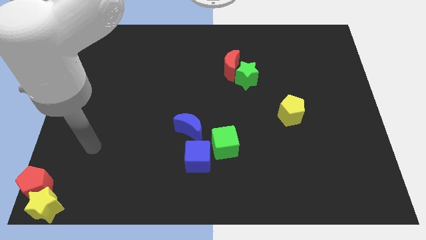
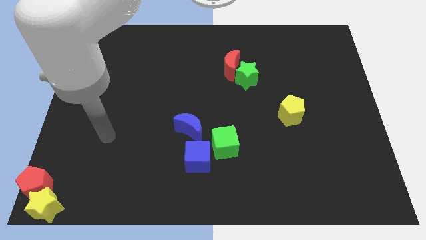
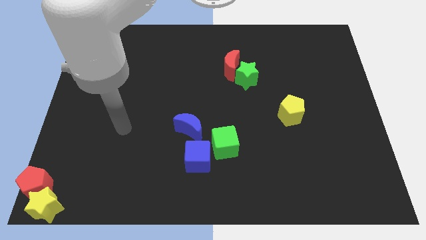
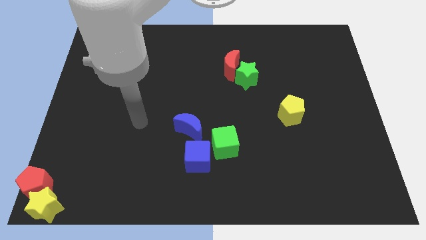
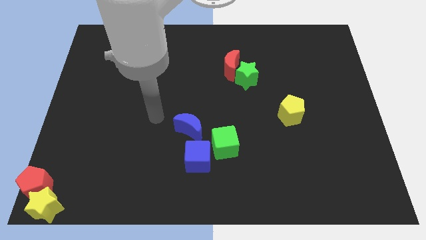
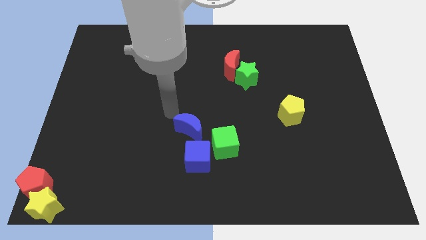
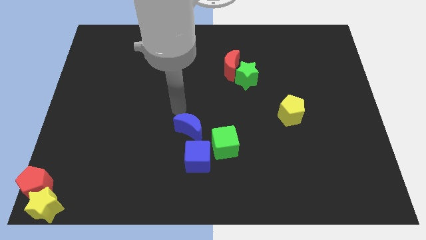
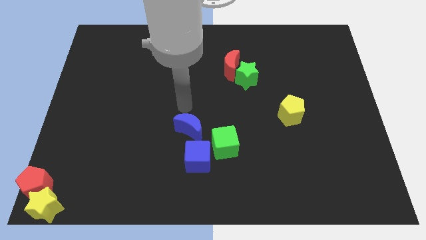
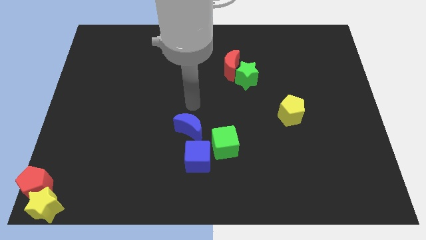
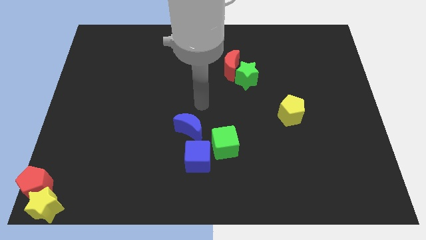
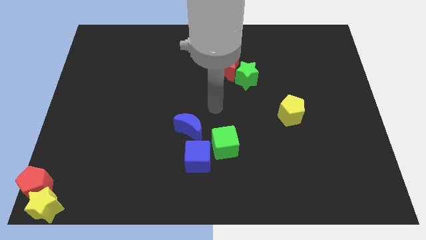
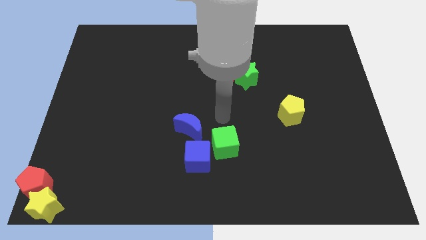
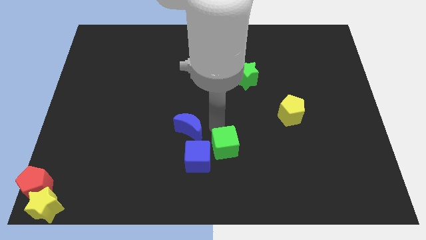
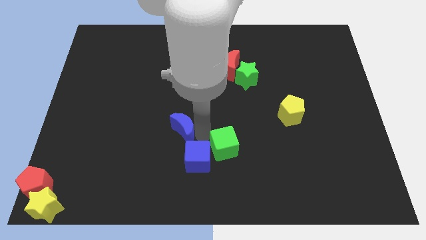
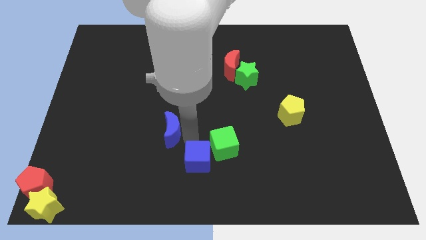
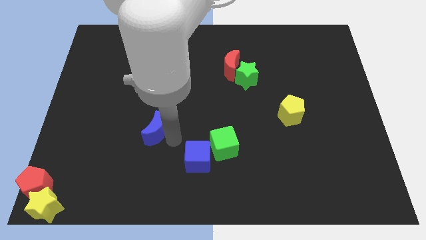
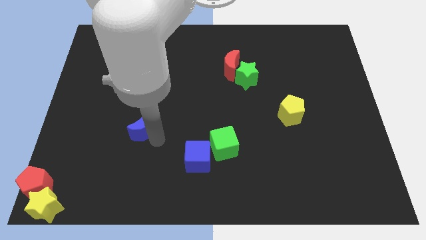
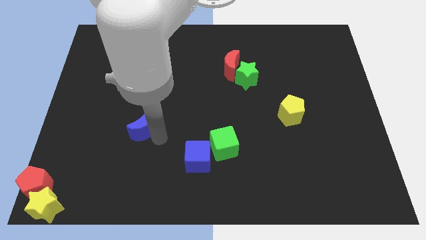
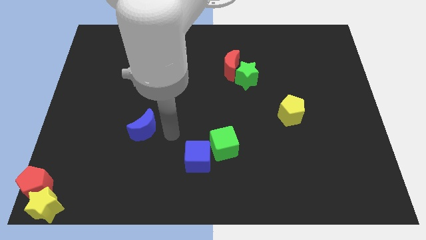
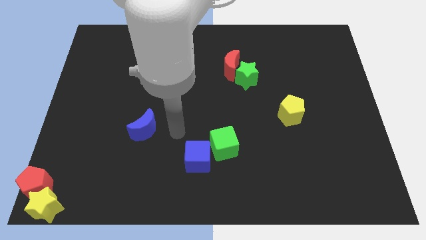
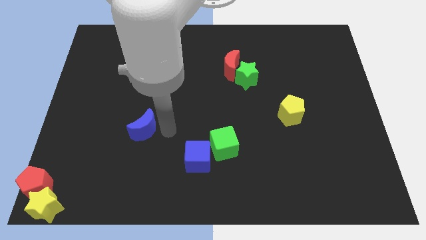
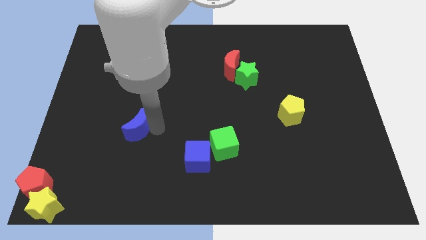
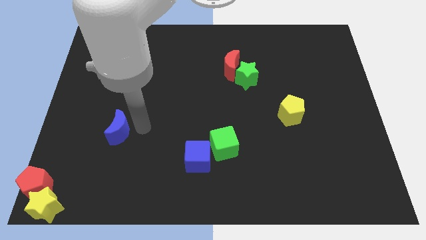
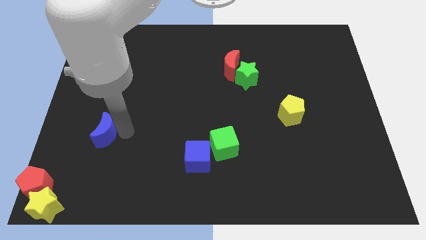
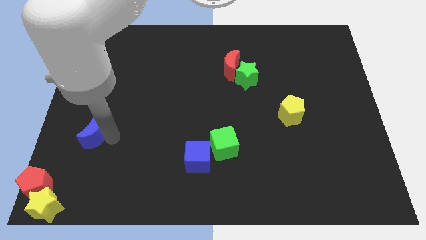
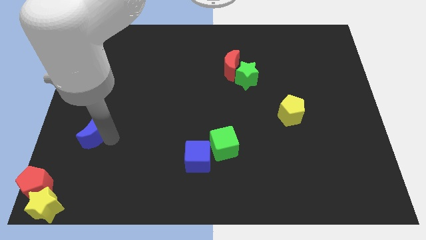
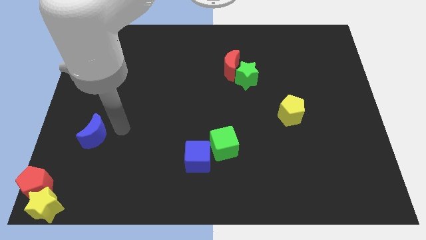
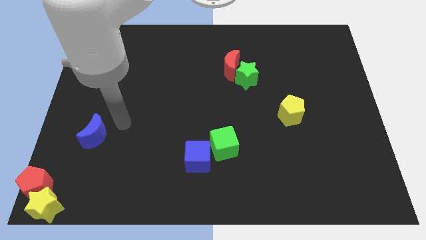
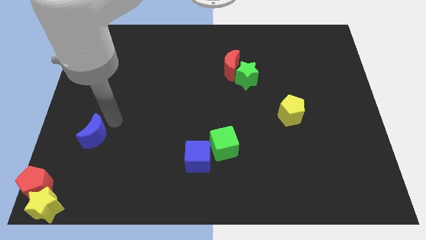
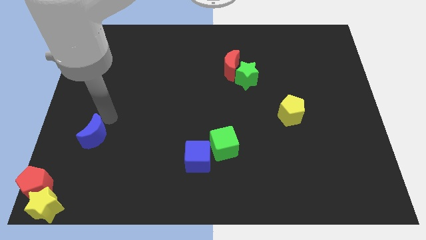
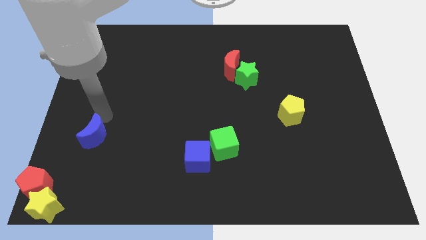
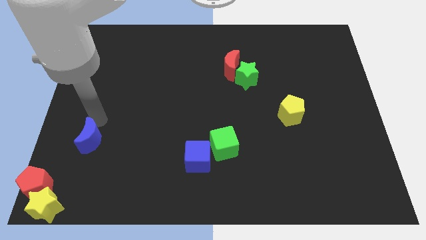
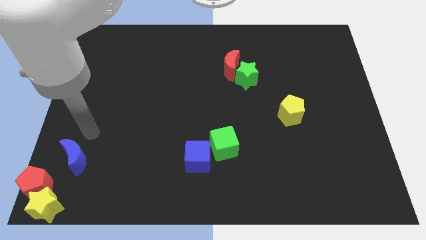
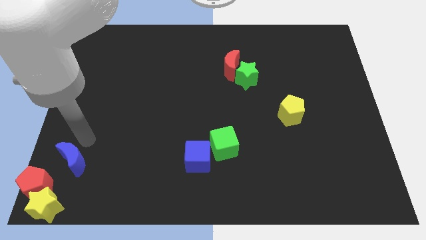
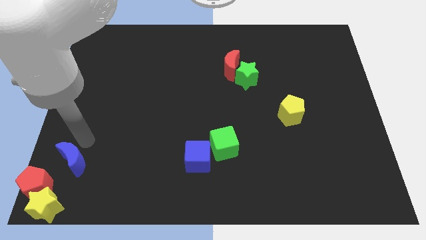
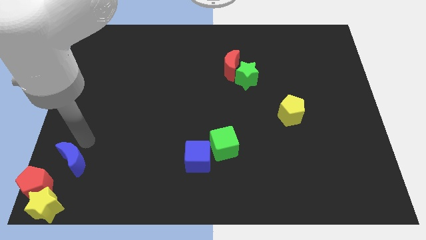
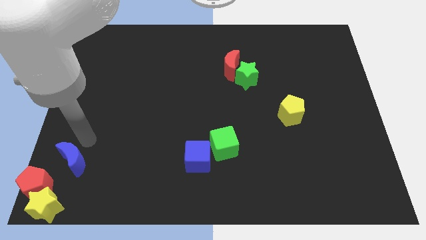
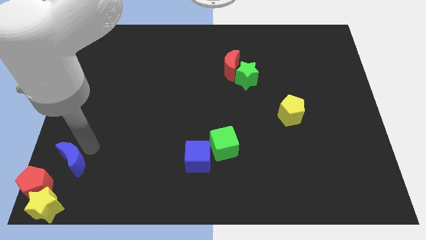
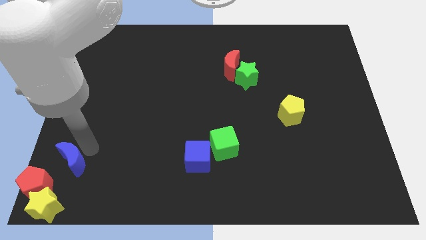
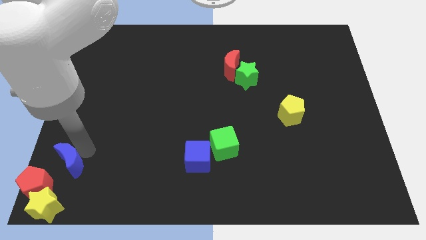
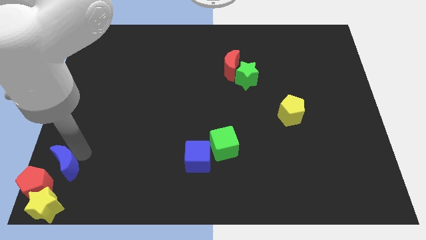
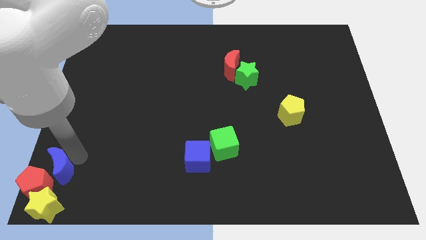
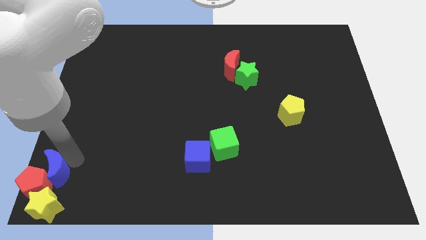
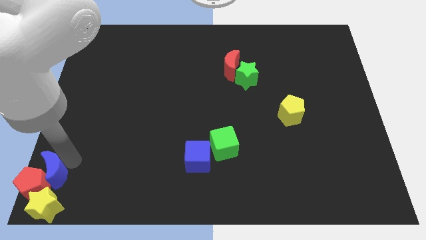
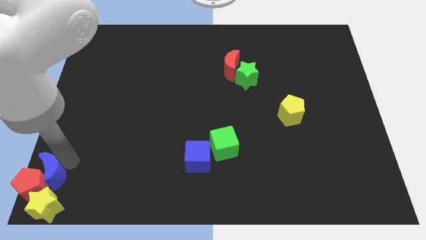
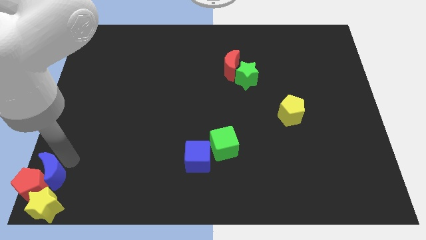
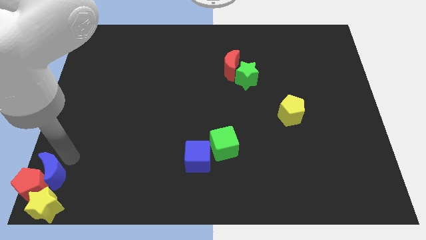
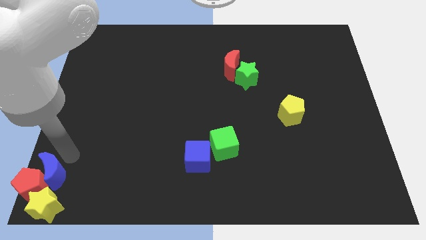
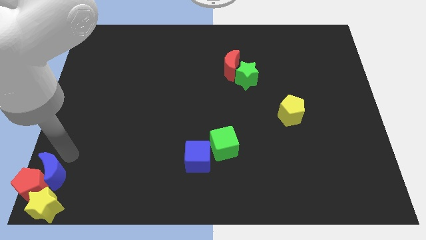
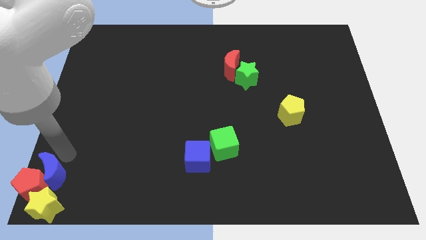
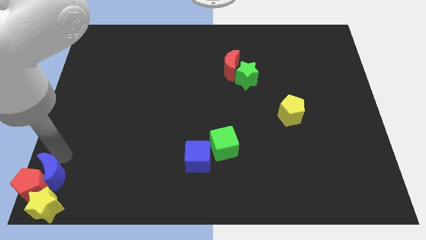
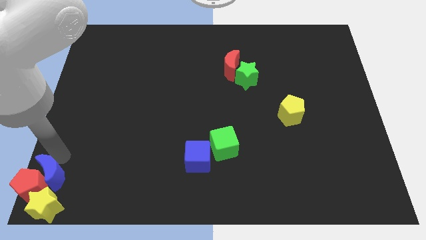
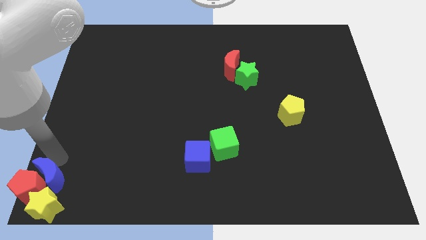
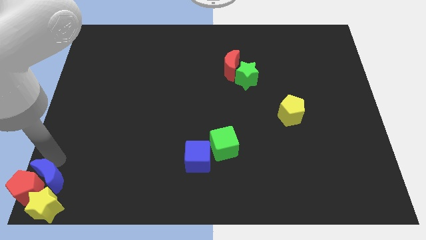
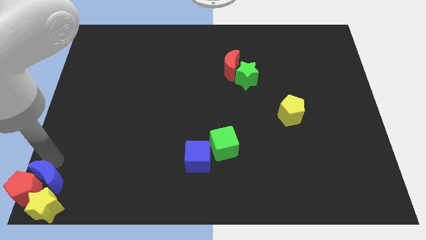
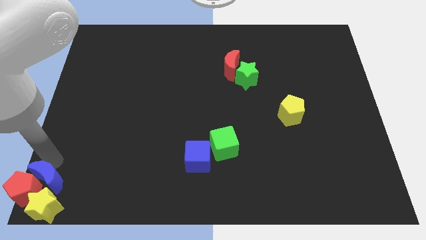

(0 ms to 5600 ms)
push the blue moon into the group of blocks

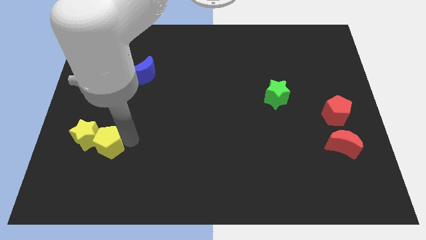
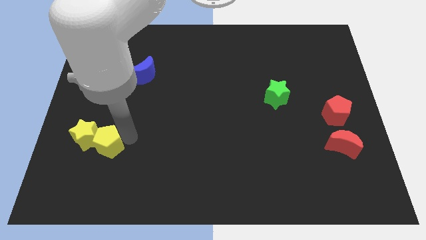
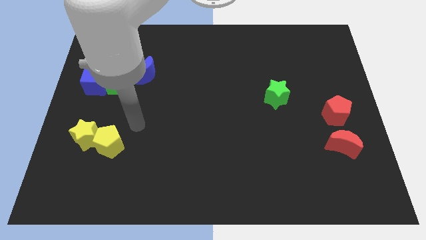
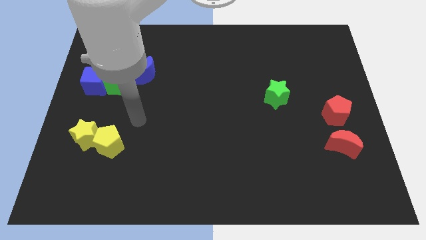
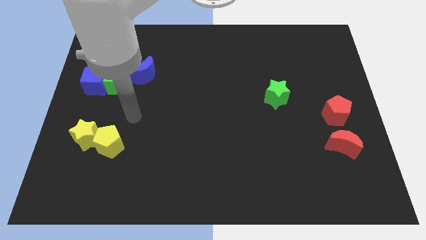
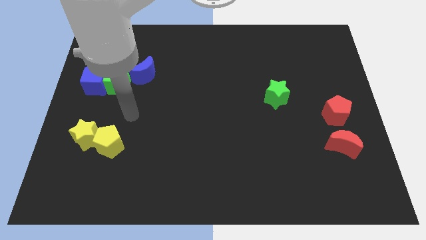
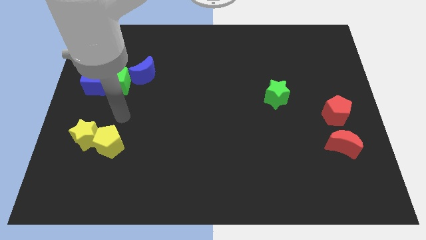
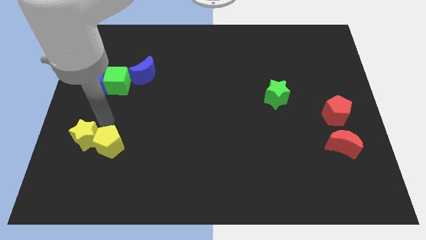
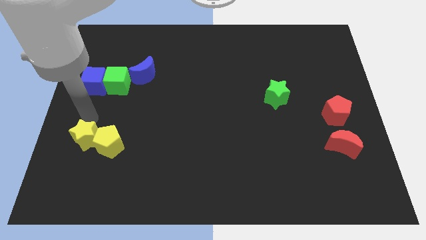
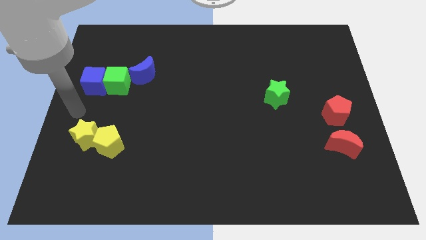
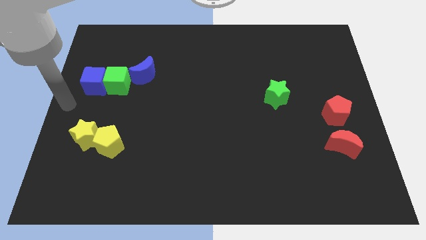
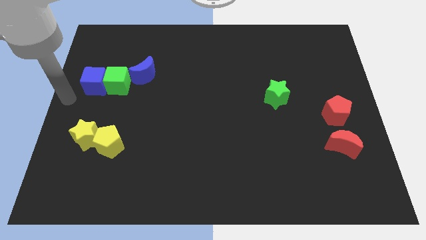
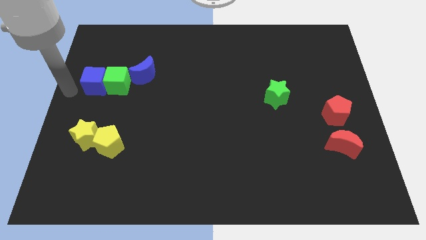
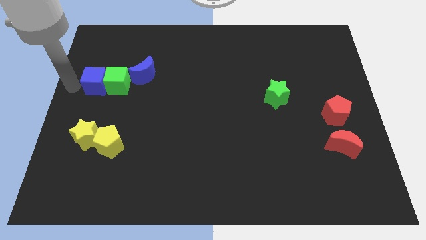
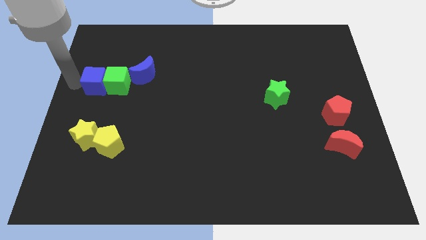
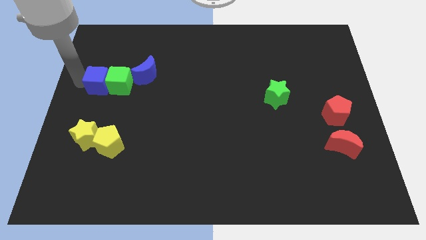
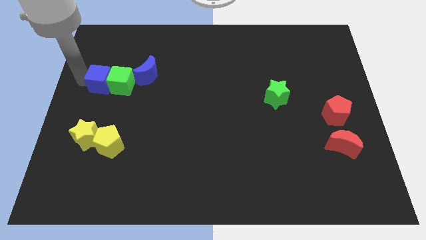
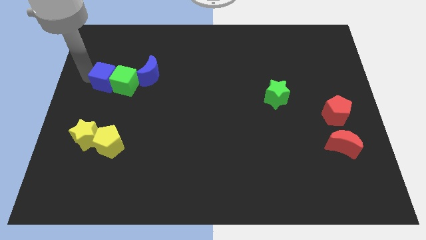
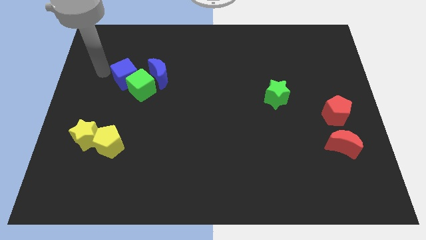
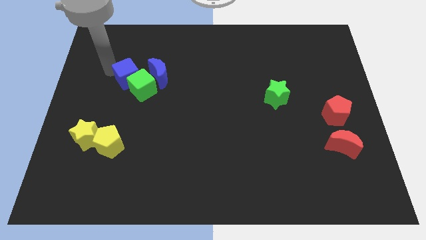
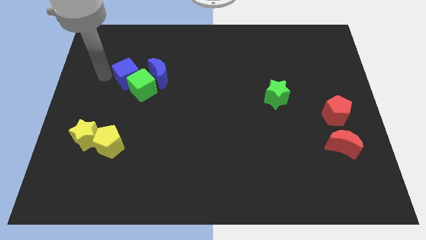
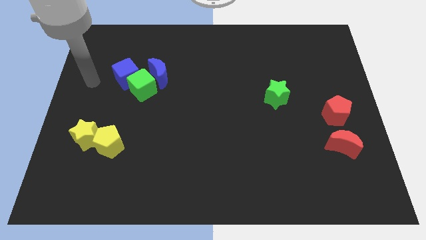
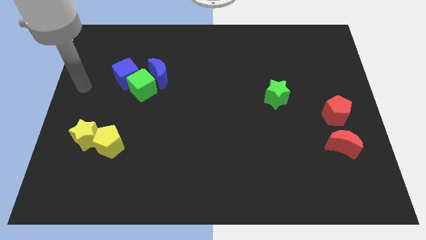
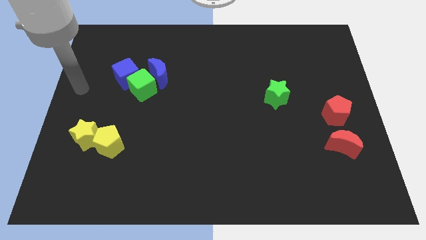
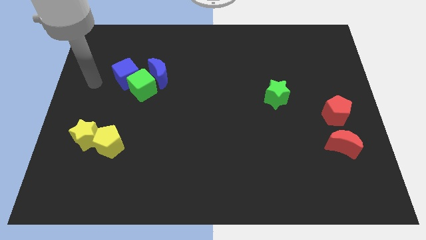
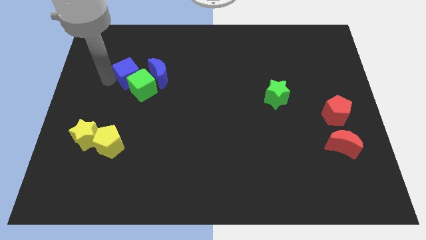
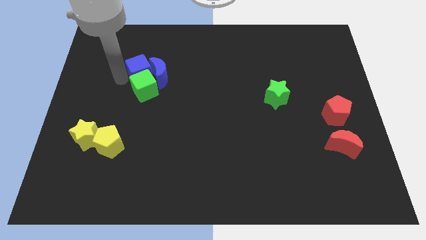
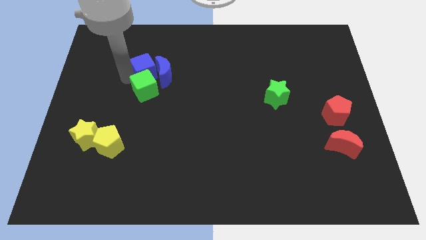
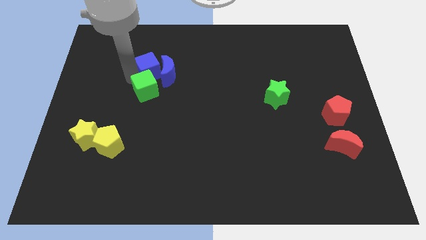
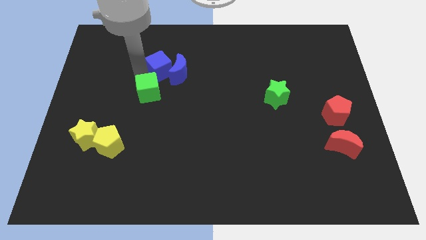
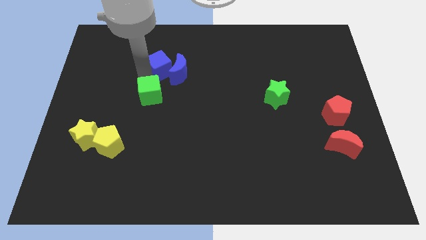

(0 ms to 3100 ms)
push the blue cube into the blue crescent

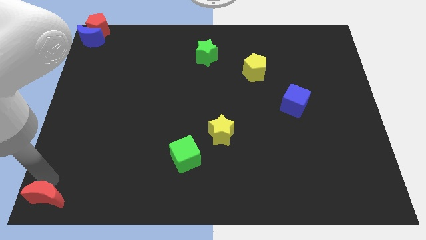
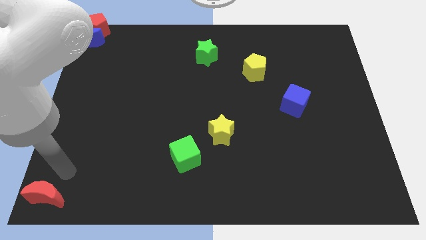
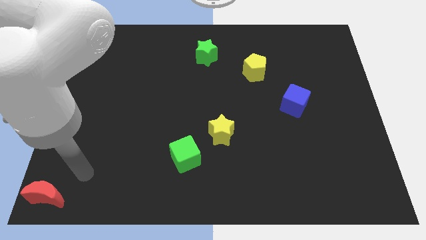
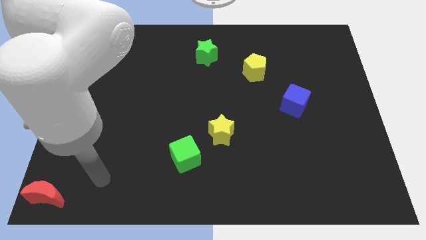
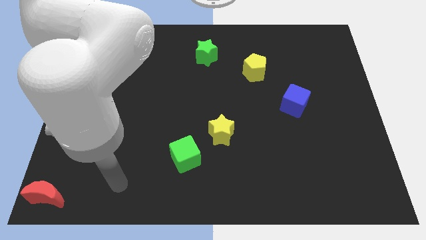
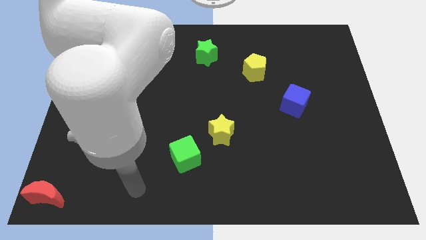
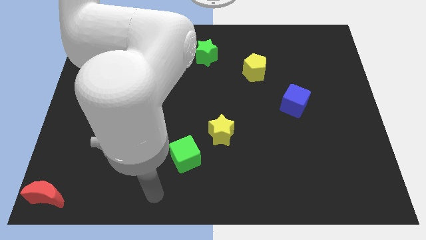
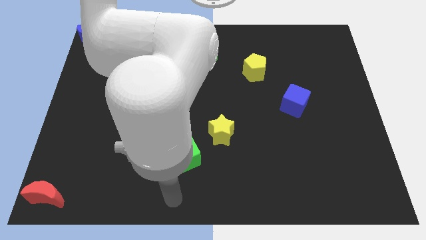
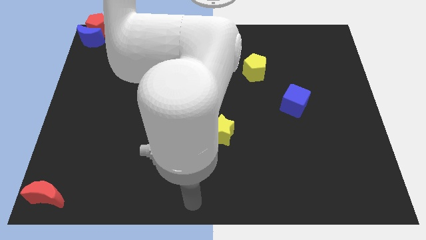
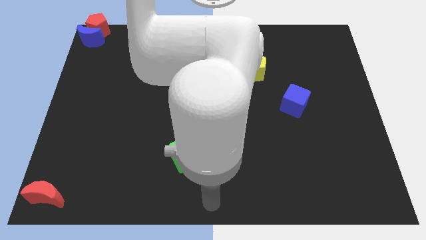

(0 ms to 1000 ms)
move your arm away from red moon
